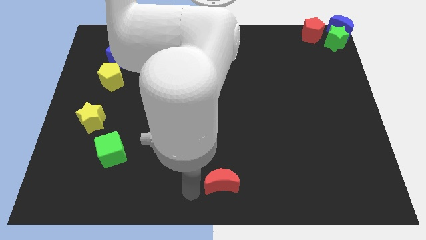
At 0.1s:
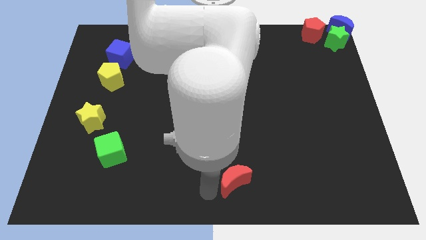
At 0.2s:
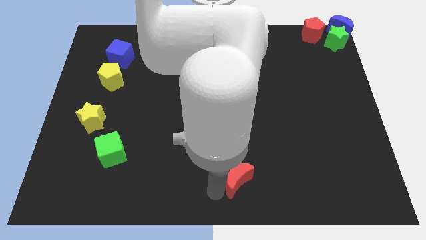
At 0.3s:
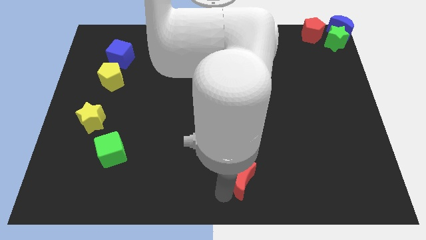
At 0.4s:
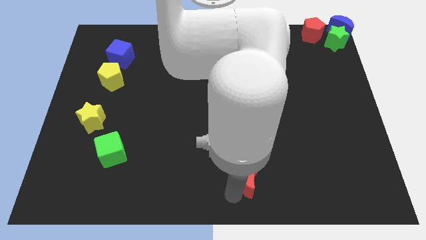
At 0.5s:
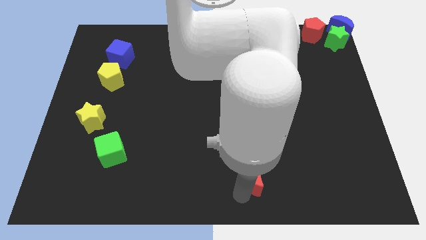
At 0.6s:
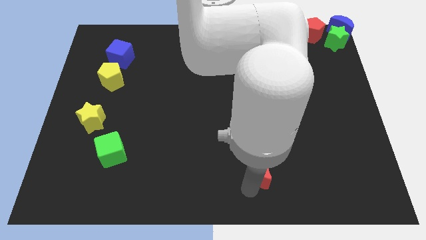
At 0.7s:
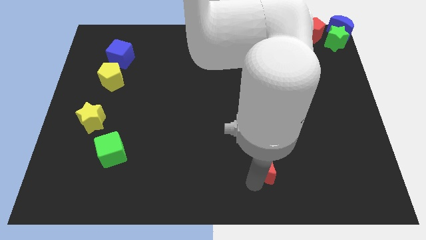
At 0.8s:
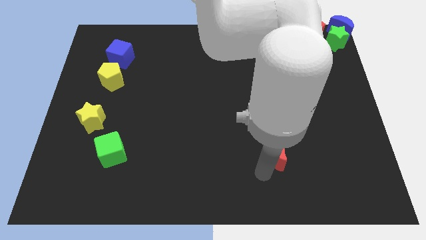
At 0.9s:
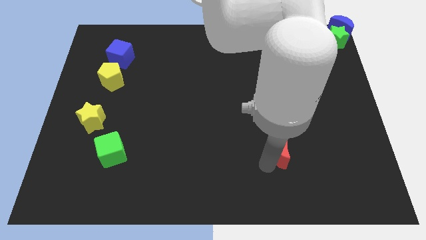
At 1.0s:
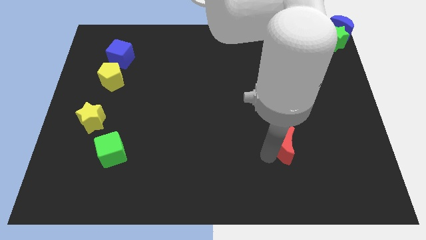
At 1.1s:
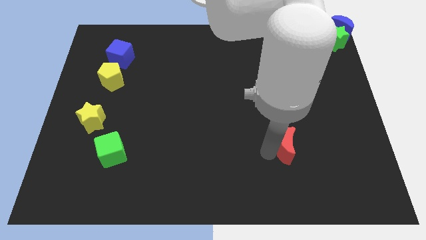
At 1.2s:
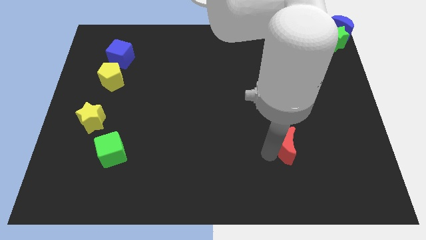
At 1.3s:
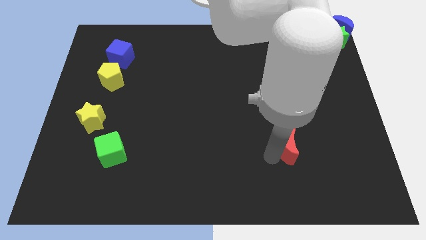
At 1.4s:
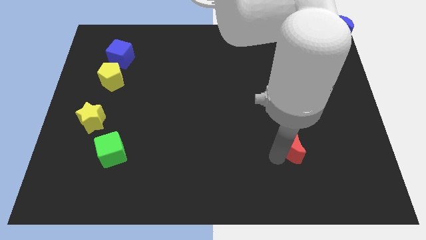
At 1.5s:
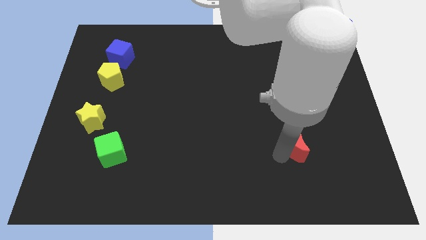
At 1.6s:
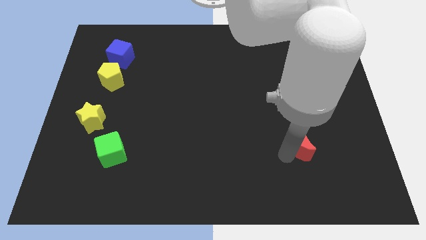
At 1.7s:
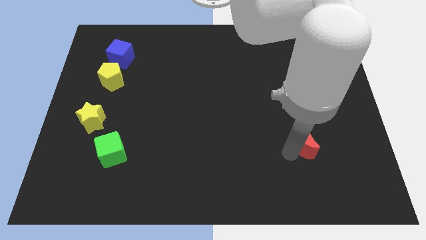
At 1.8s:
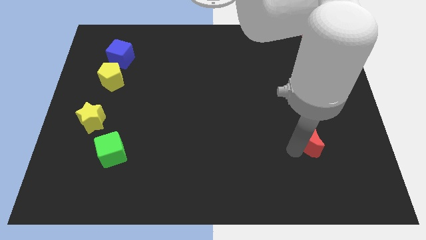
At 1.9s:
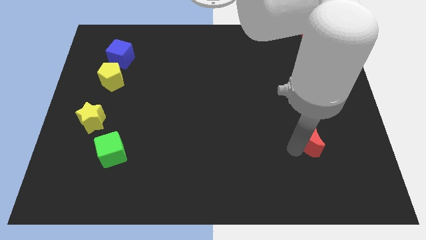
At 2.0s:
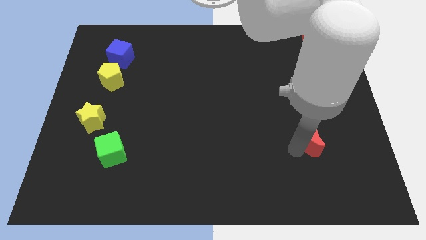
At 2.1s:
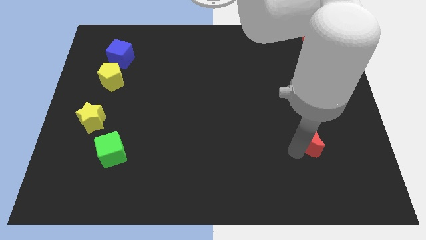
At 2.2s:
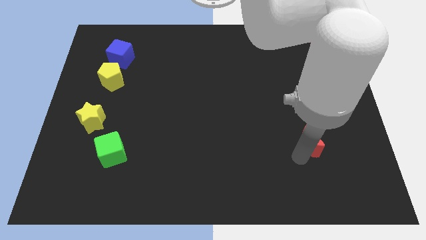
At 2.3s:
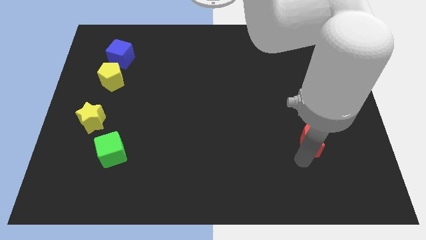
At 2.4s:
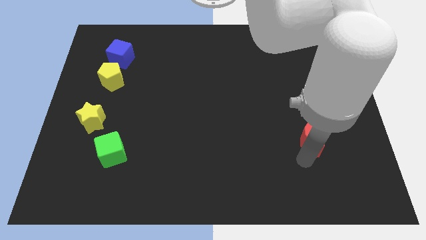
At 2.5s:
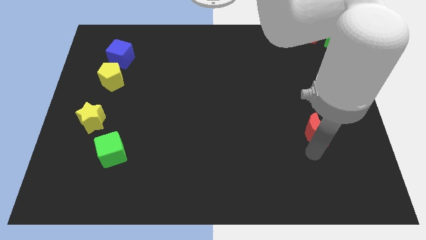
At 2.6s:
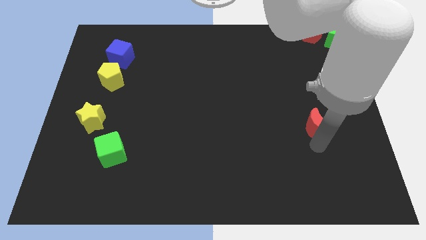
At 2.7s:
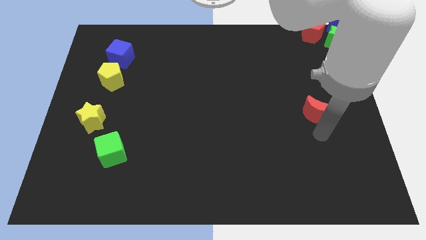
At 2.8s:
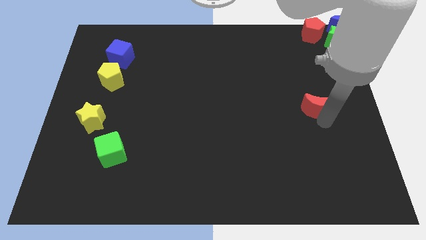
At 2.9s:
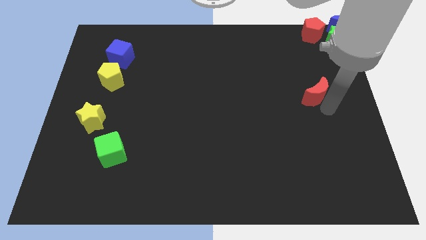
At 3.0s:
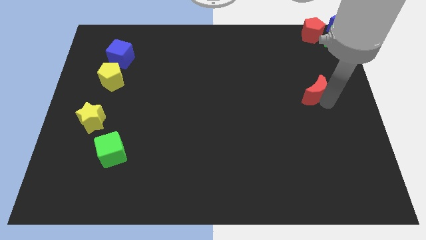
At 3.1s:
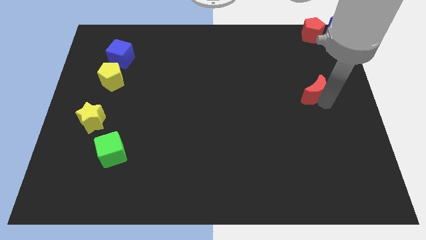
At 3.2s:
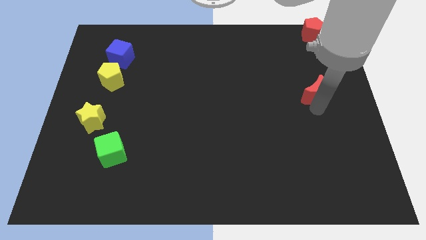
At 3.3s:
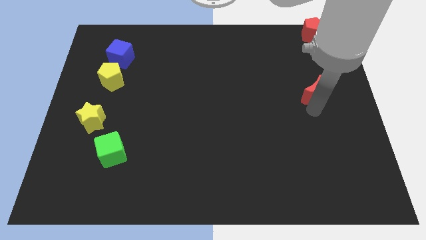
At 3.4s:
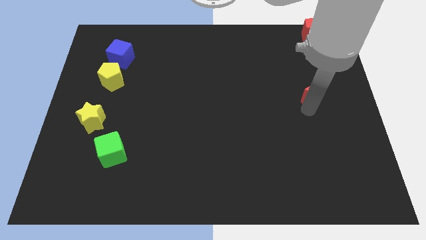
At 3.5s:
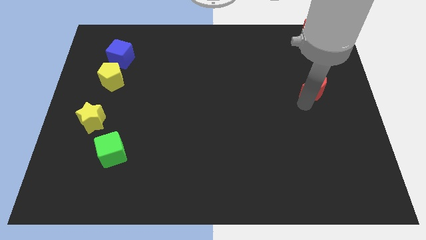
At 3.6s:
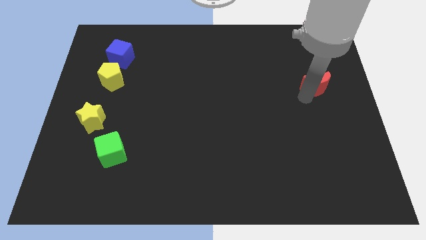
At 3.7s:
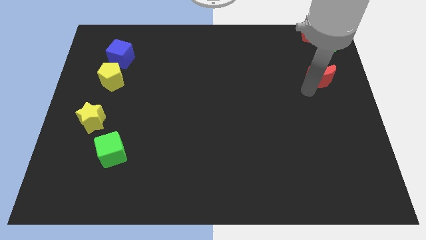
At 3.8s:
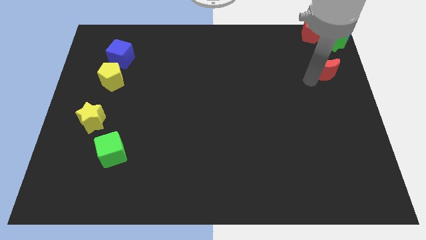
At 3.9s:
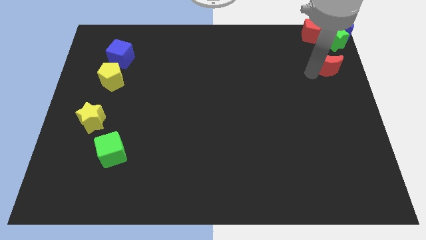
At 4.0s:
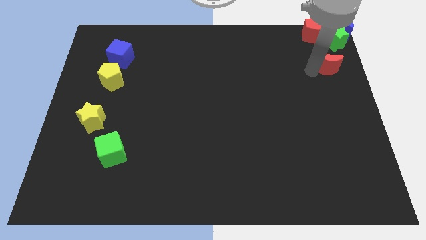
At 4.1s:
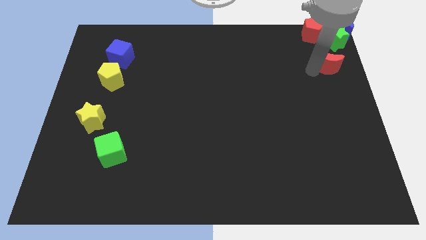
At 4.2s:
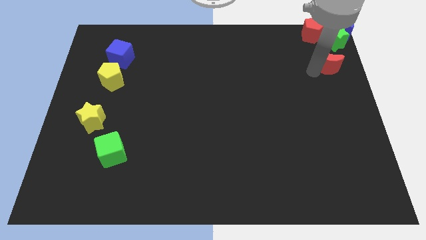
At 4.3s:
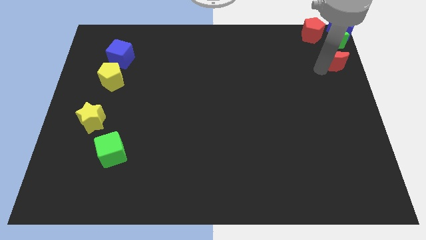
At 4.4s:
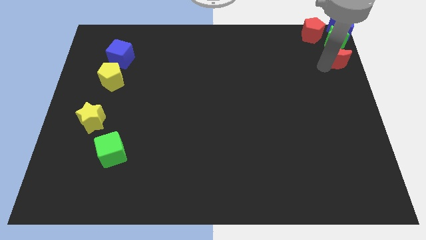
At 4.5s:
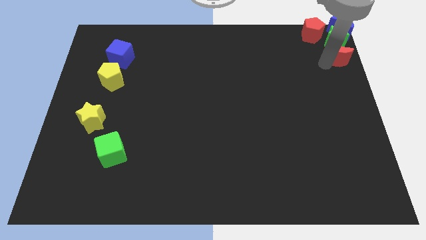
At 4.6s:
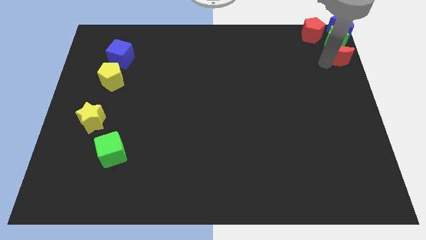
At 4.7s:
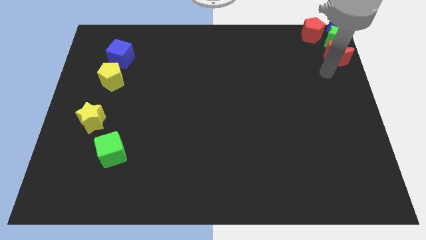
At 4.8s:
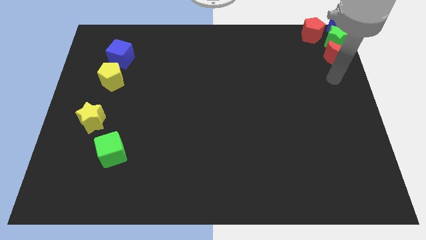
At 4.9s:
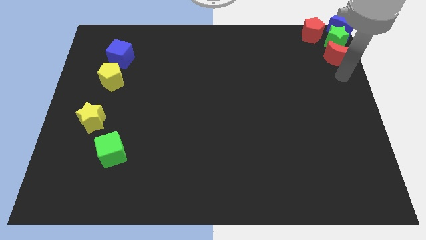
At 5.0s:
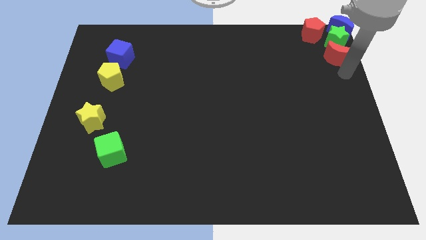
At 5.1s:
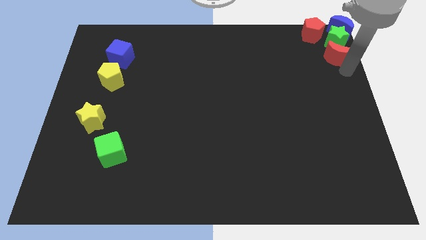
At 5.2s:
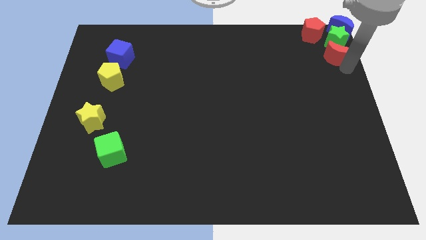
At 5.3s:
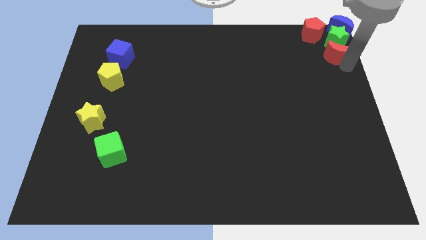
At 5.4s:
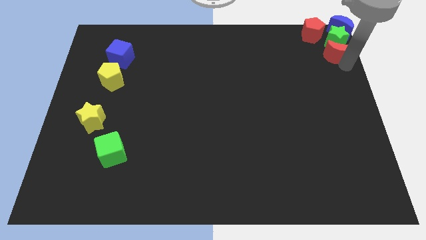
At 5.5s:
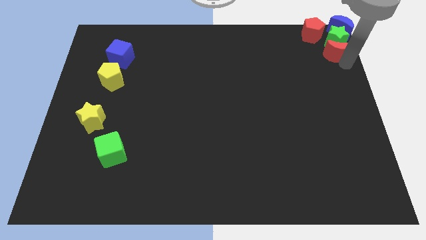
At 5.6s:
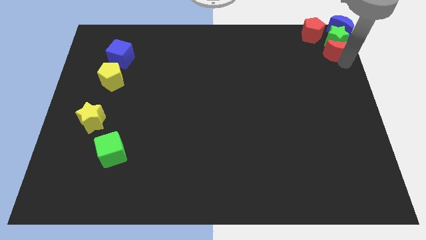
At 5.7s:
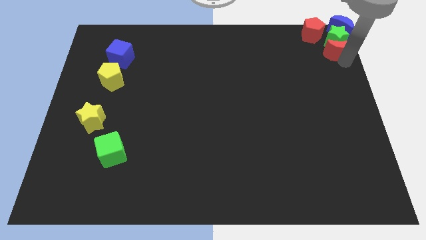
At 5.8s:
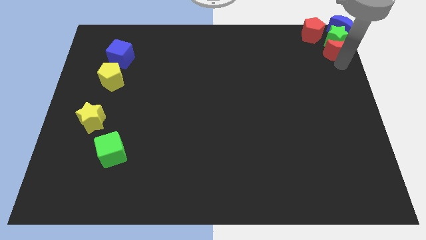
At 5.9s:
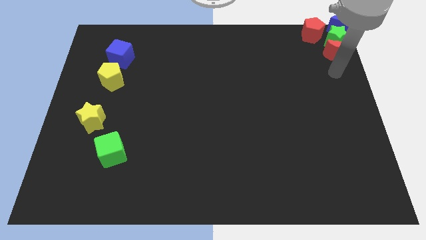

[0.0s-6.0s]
place the red moon down to the green star

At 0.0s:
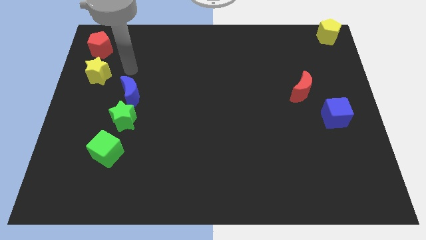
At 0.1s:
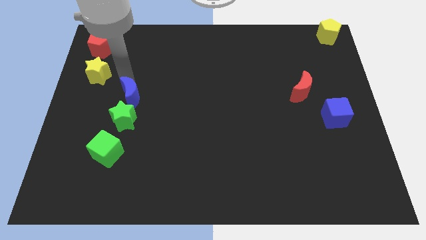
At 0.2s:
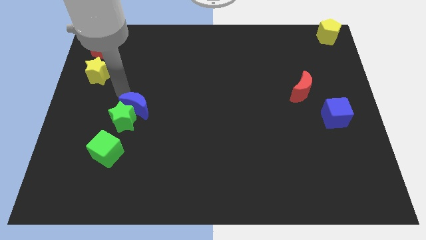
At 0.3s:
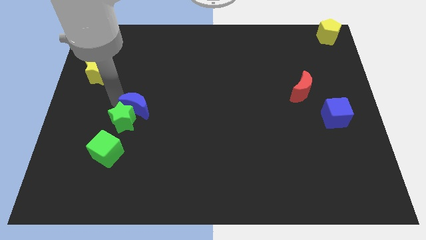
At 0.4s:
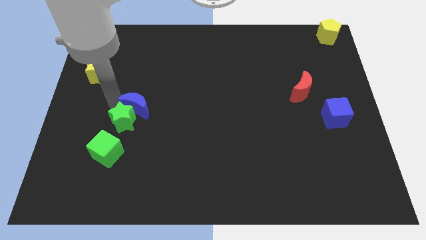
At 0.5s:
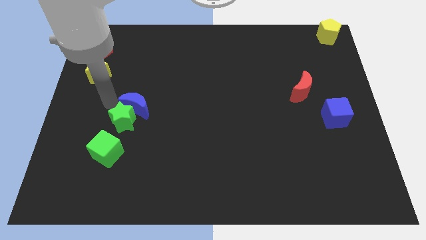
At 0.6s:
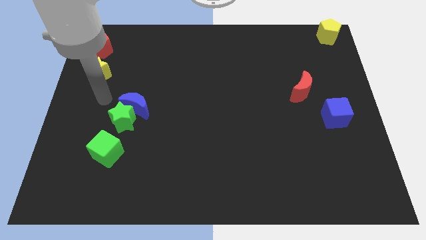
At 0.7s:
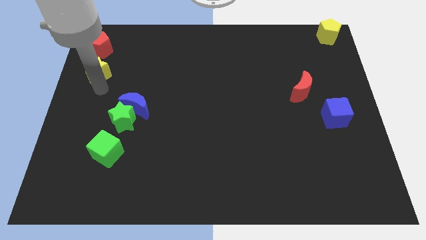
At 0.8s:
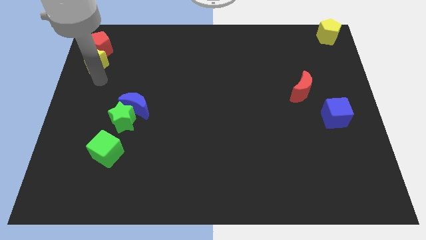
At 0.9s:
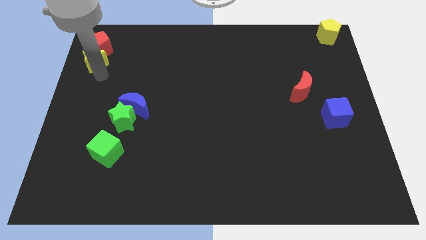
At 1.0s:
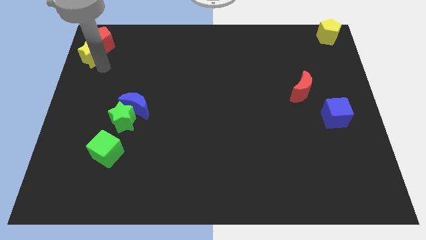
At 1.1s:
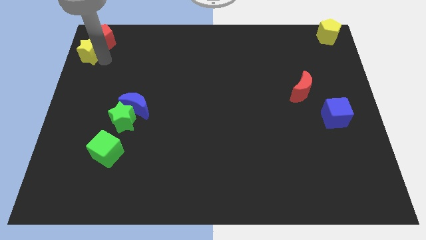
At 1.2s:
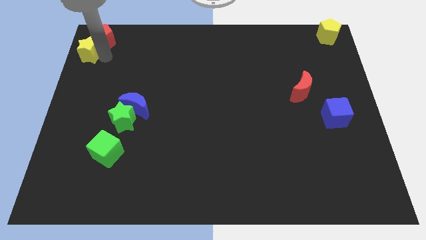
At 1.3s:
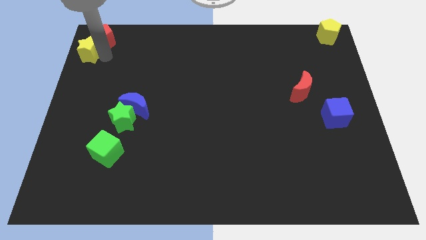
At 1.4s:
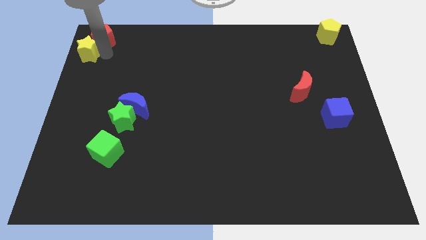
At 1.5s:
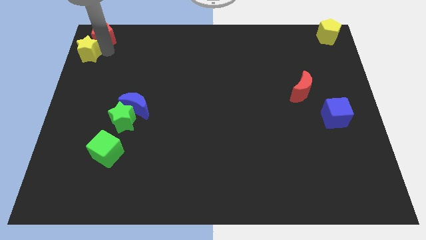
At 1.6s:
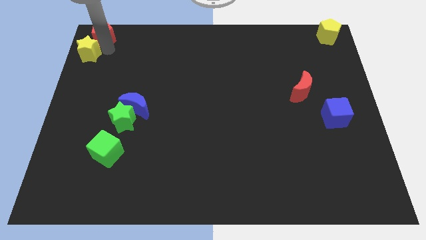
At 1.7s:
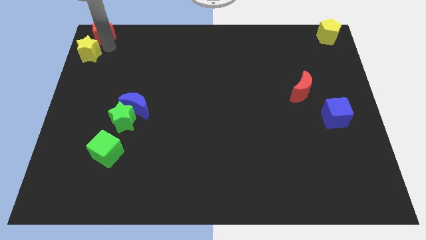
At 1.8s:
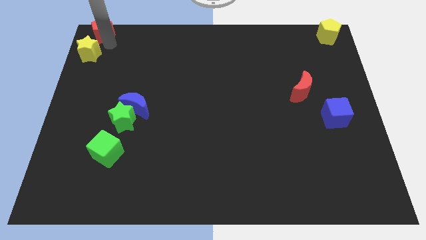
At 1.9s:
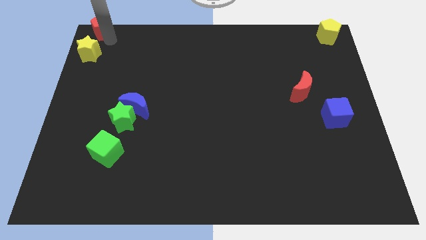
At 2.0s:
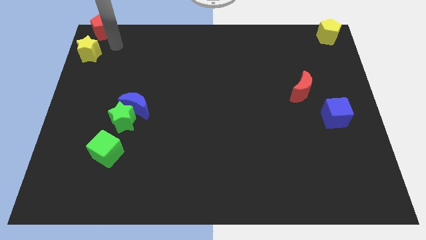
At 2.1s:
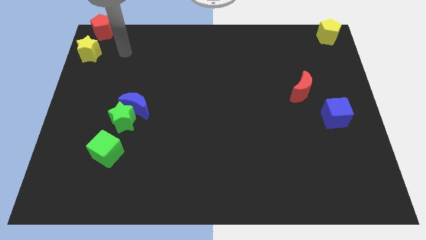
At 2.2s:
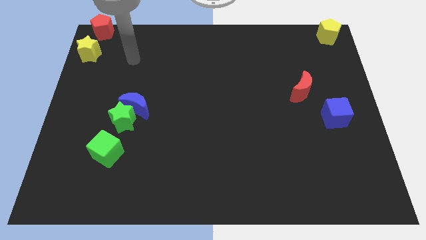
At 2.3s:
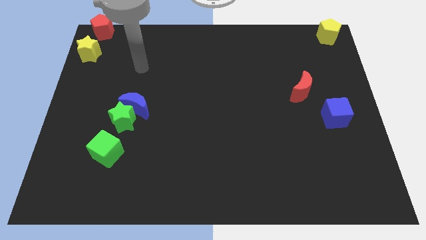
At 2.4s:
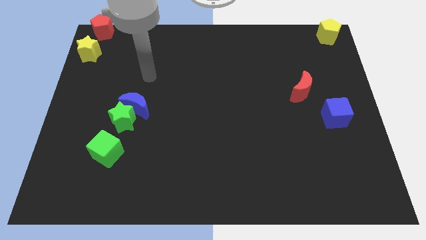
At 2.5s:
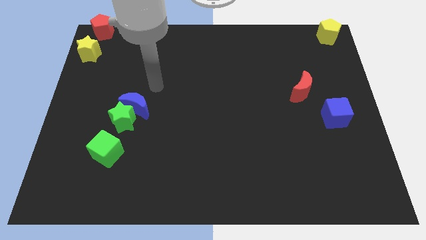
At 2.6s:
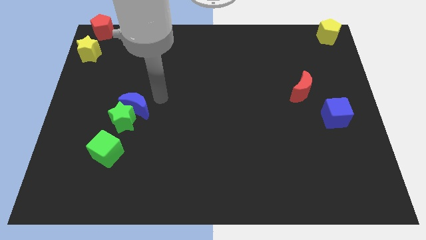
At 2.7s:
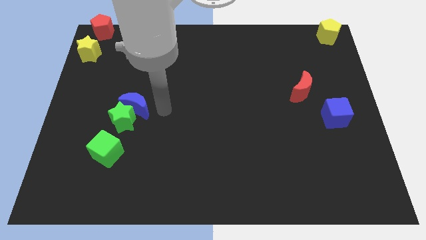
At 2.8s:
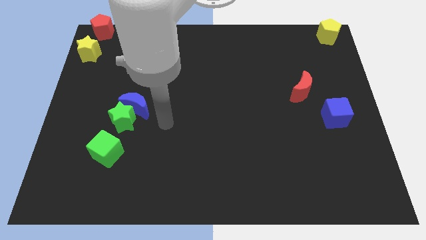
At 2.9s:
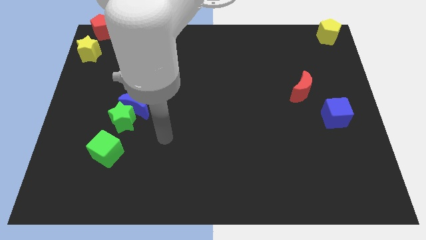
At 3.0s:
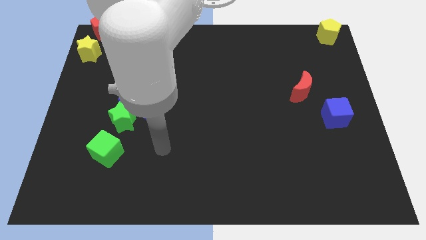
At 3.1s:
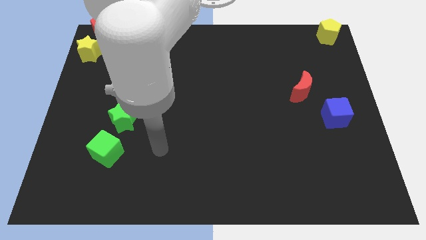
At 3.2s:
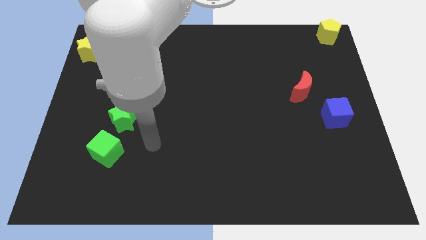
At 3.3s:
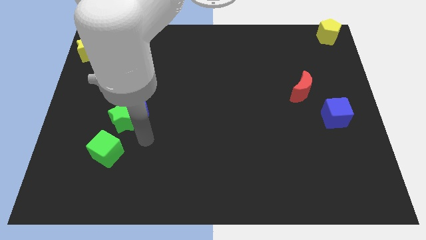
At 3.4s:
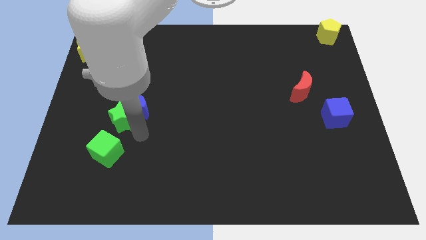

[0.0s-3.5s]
push the yellow star along with red pentagon up slightly
